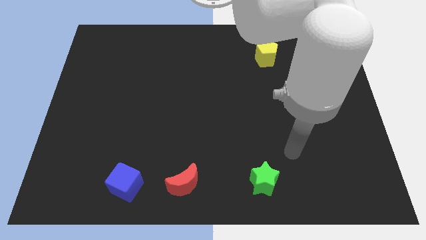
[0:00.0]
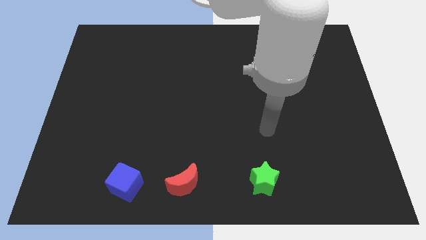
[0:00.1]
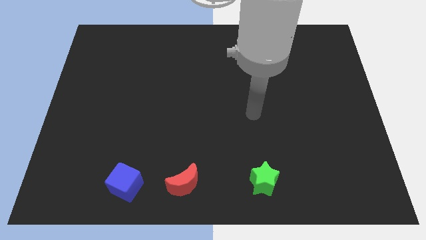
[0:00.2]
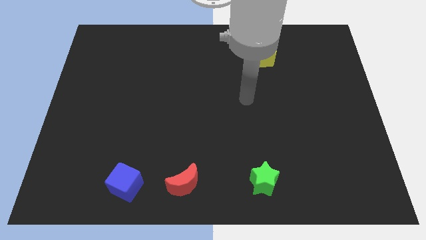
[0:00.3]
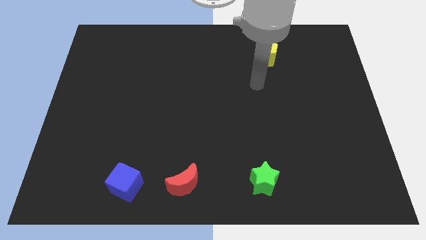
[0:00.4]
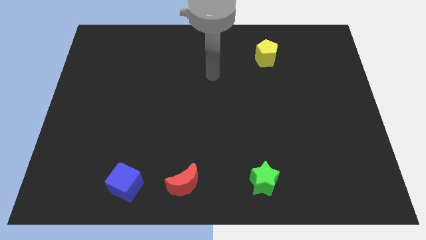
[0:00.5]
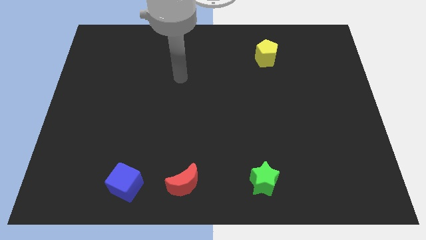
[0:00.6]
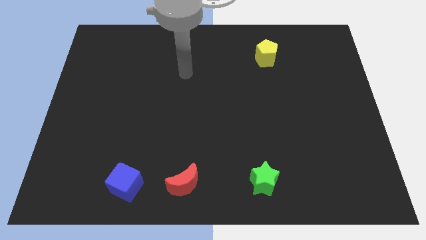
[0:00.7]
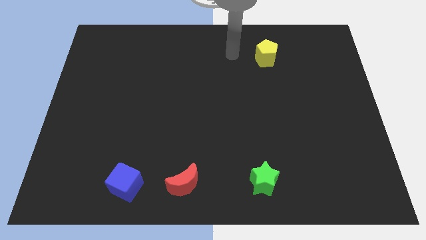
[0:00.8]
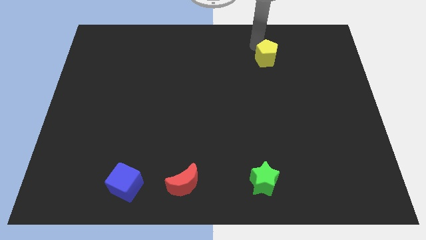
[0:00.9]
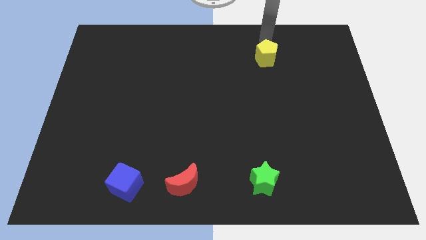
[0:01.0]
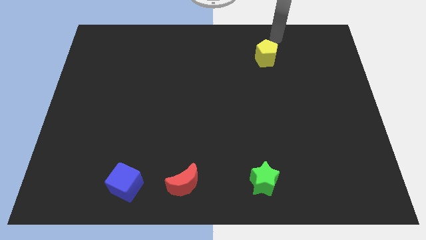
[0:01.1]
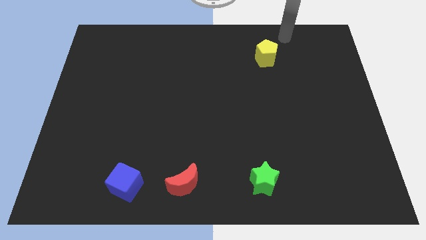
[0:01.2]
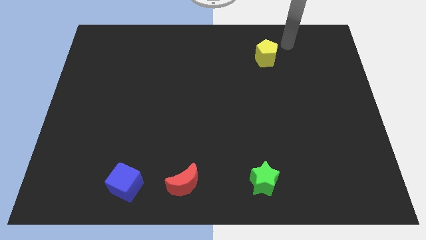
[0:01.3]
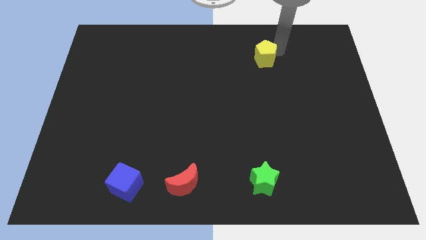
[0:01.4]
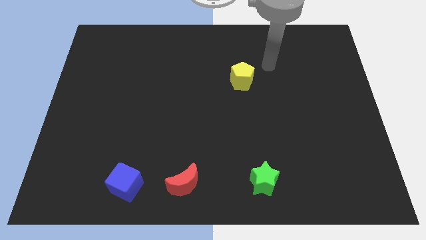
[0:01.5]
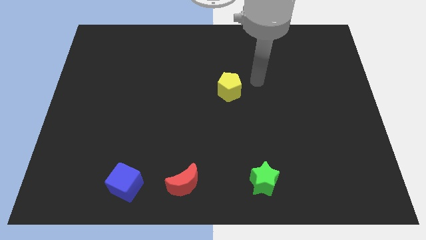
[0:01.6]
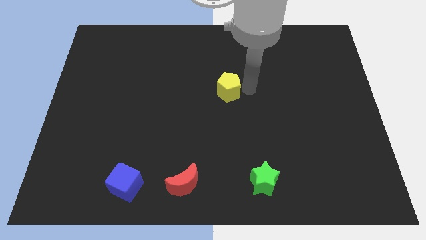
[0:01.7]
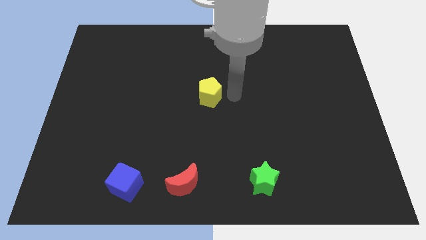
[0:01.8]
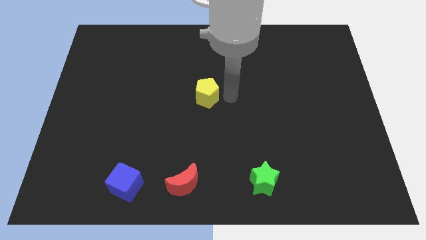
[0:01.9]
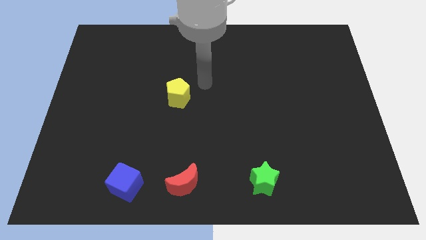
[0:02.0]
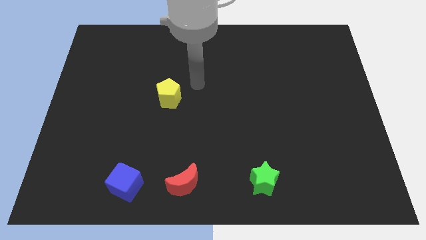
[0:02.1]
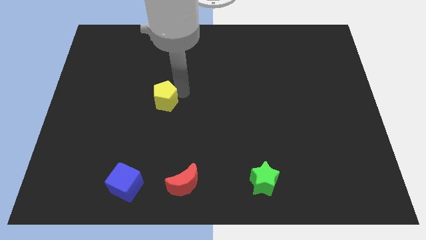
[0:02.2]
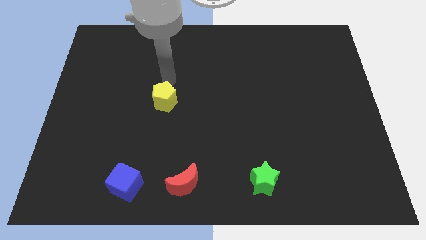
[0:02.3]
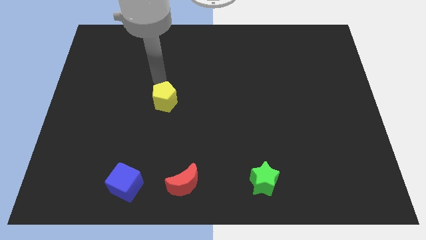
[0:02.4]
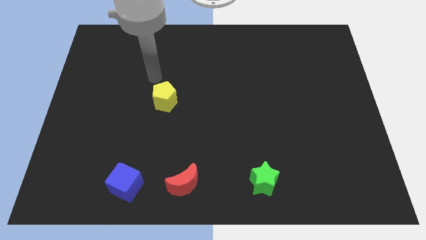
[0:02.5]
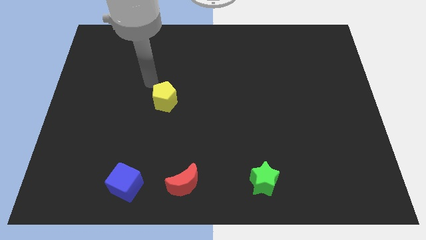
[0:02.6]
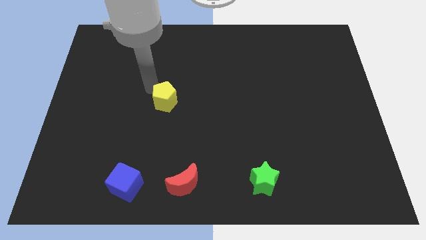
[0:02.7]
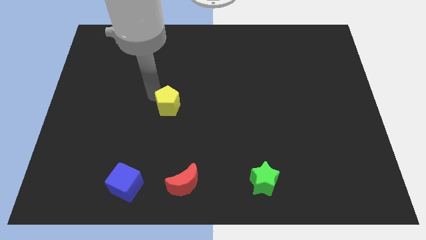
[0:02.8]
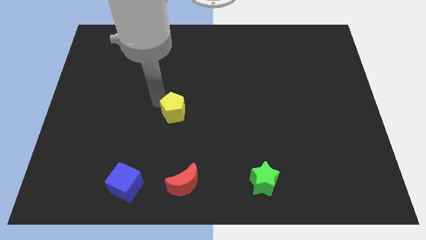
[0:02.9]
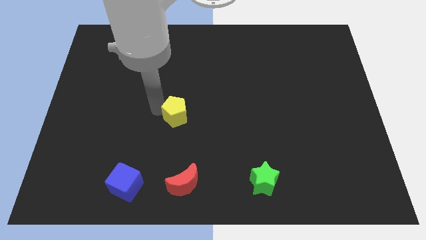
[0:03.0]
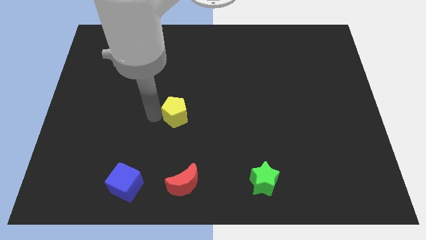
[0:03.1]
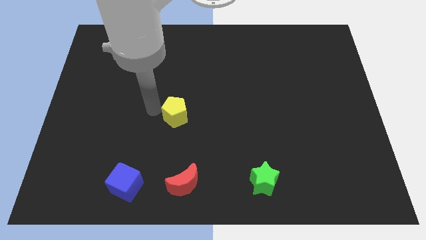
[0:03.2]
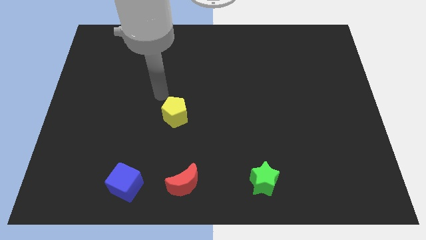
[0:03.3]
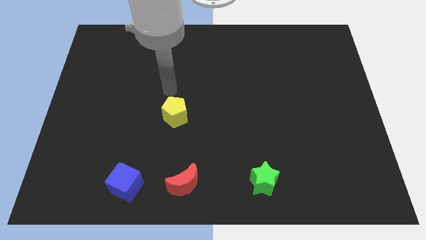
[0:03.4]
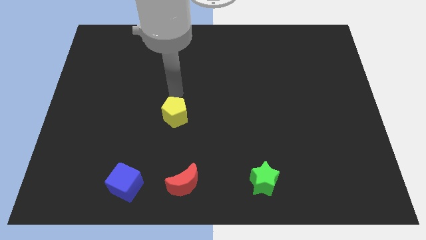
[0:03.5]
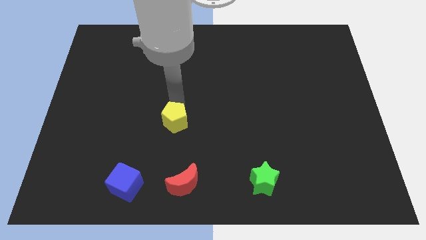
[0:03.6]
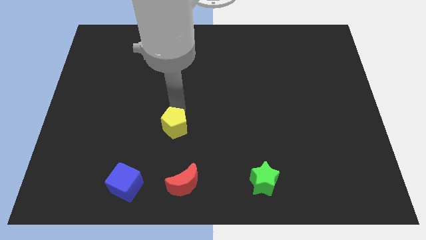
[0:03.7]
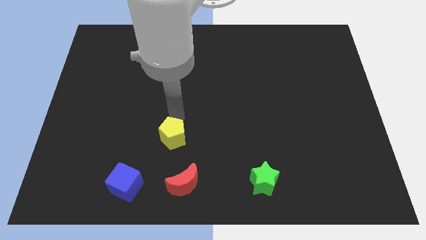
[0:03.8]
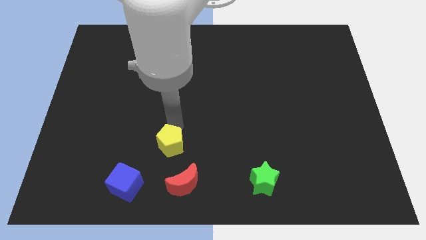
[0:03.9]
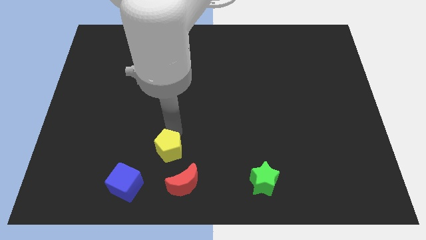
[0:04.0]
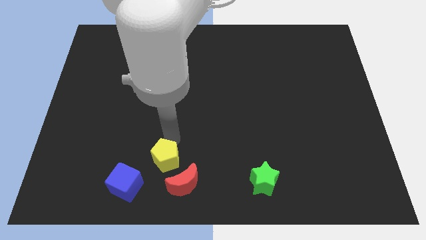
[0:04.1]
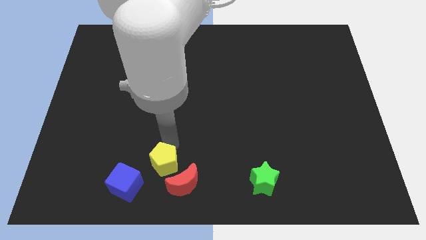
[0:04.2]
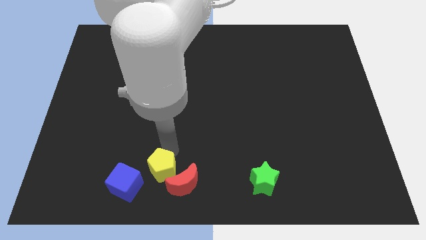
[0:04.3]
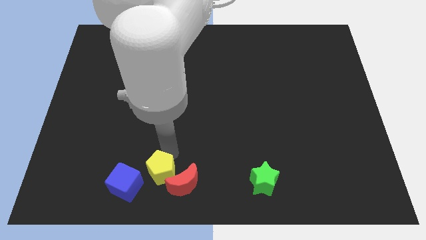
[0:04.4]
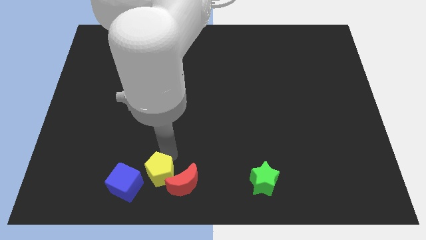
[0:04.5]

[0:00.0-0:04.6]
move the pentagon towards the red block

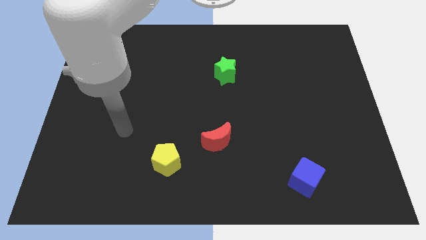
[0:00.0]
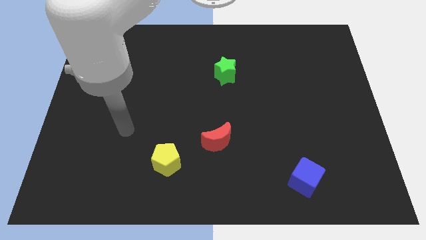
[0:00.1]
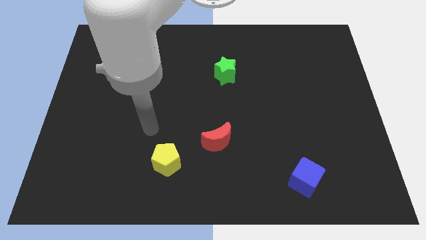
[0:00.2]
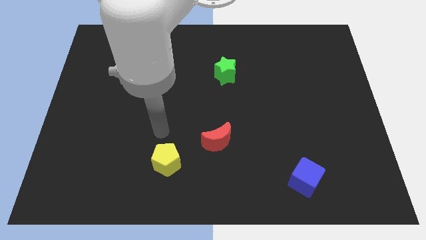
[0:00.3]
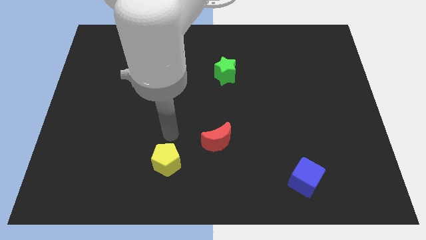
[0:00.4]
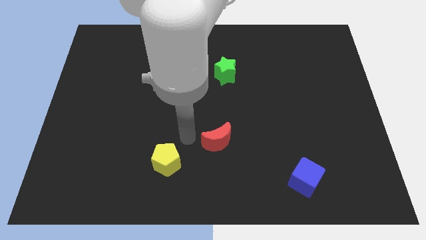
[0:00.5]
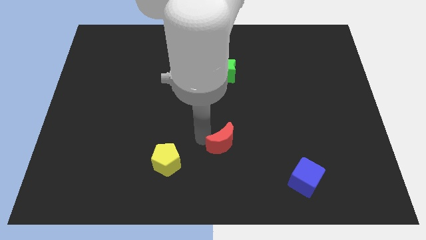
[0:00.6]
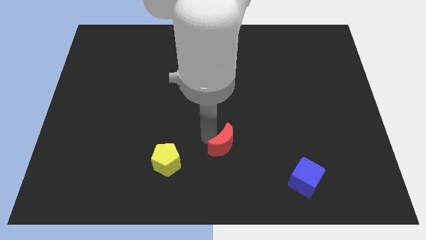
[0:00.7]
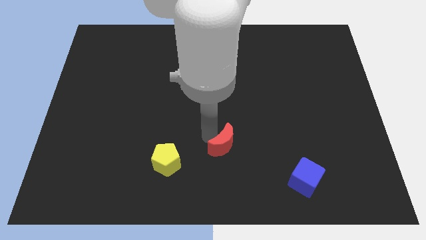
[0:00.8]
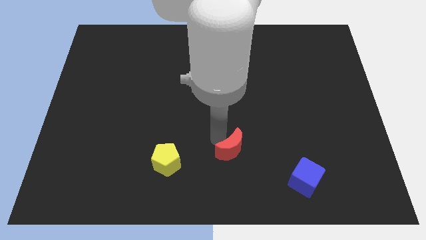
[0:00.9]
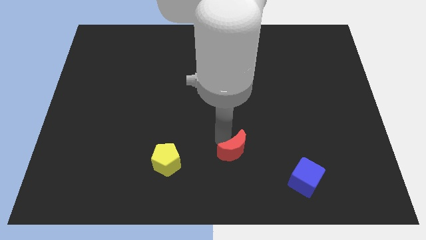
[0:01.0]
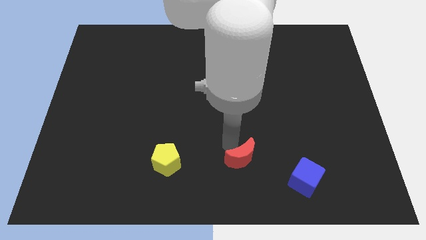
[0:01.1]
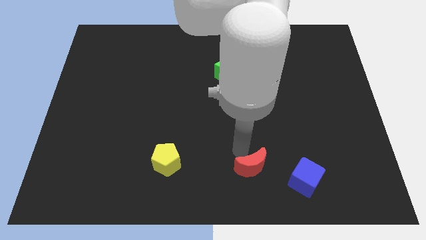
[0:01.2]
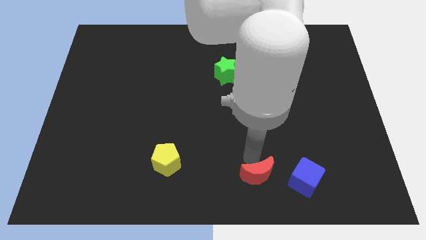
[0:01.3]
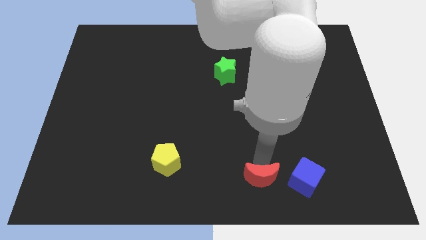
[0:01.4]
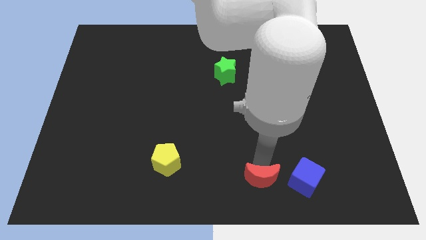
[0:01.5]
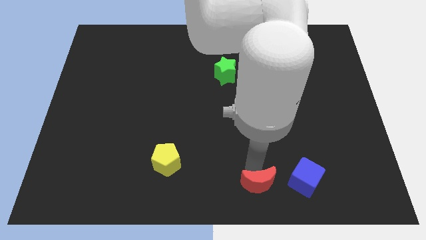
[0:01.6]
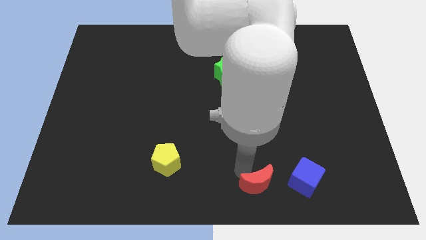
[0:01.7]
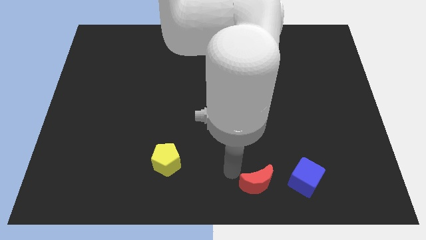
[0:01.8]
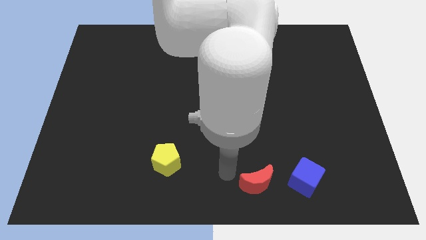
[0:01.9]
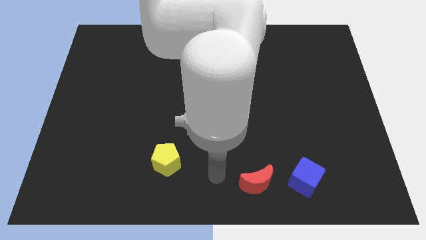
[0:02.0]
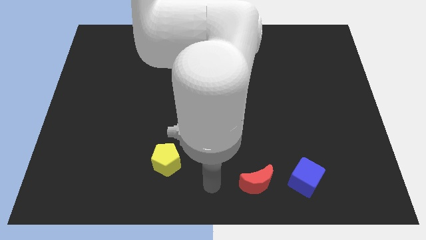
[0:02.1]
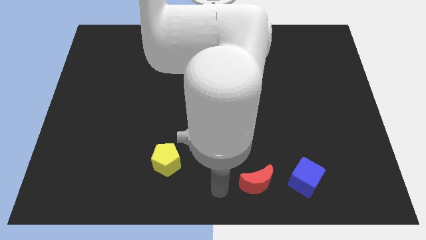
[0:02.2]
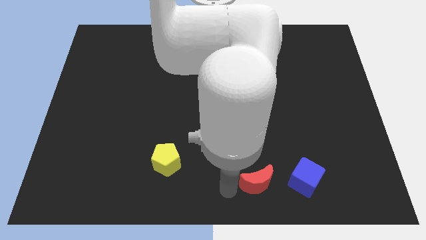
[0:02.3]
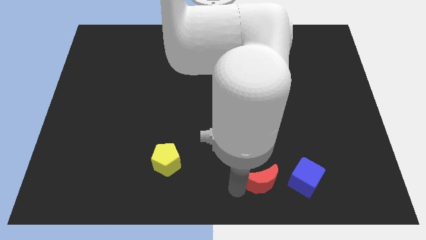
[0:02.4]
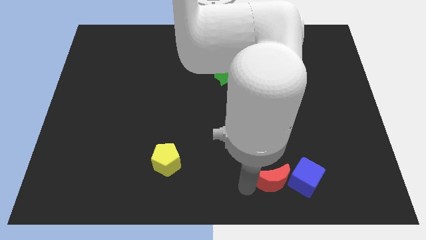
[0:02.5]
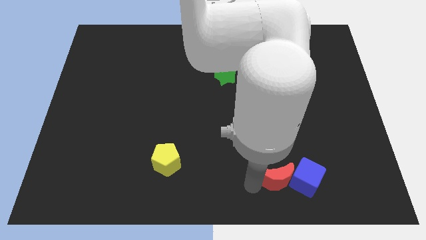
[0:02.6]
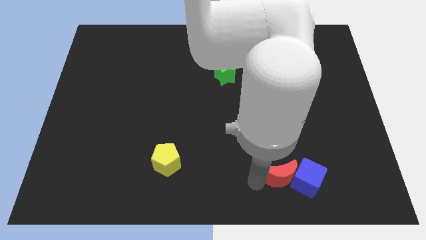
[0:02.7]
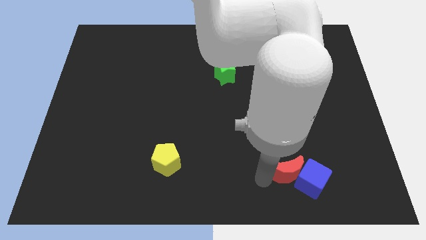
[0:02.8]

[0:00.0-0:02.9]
push the red block next to the blue cube

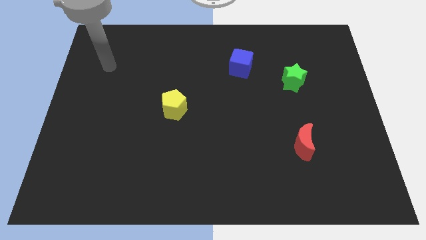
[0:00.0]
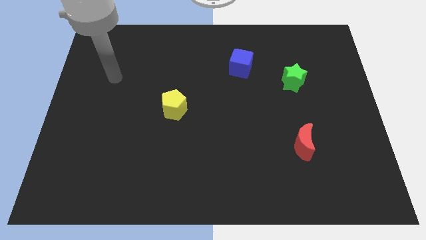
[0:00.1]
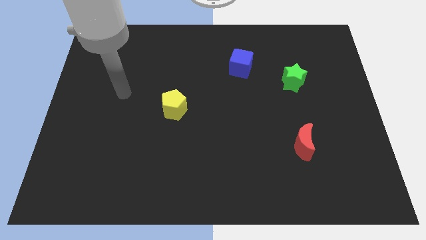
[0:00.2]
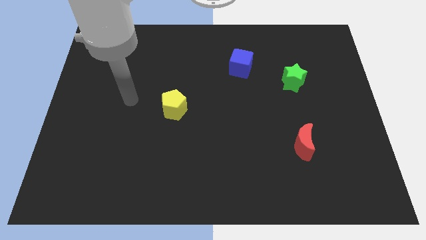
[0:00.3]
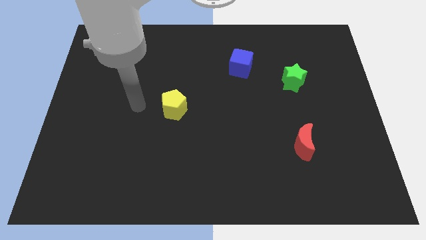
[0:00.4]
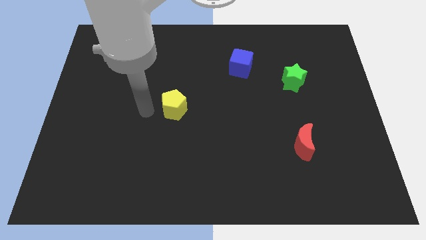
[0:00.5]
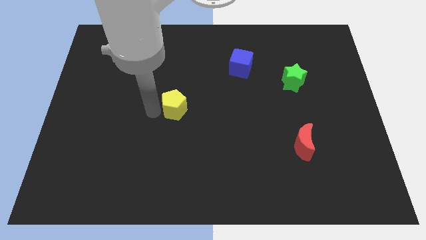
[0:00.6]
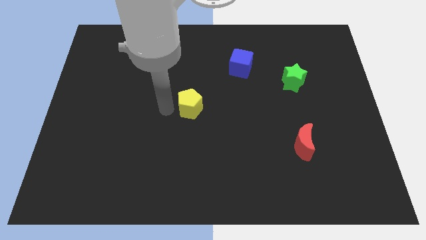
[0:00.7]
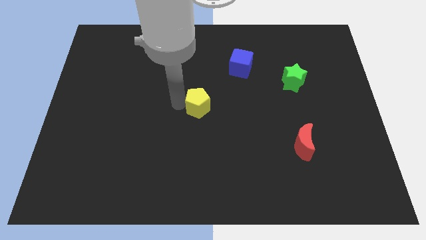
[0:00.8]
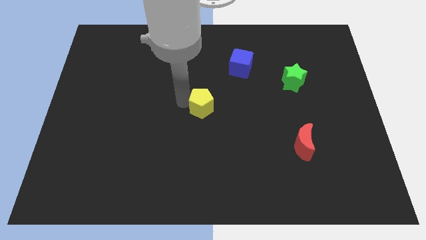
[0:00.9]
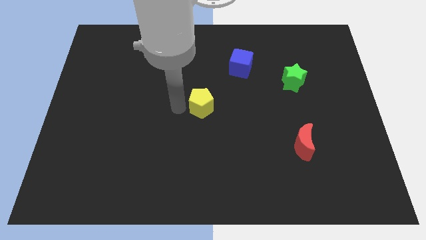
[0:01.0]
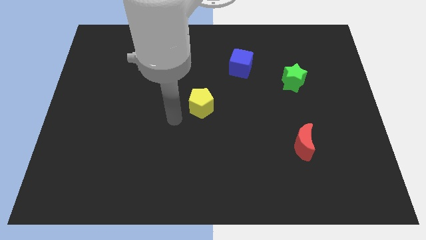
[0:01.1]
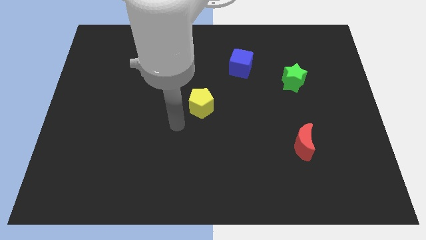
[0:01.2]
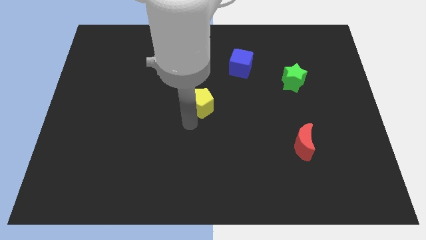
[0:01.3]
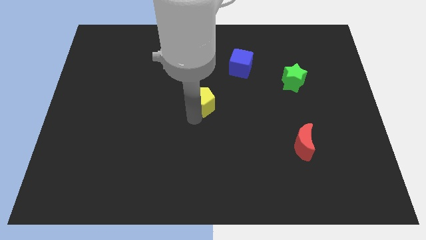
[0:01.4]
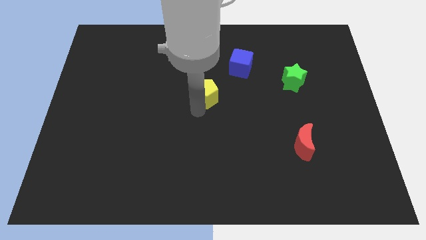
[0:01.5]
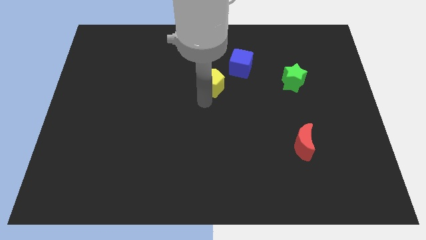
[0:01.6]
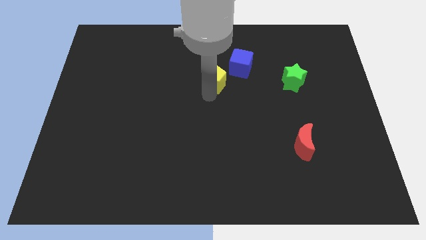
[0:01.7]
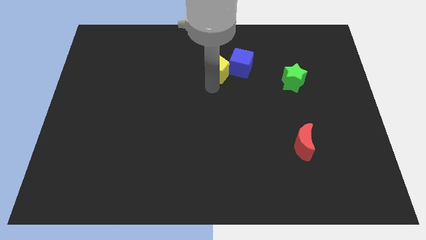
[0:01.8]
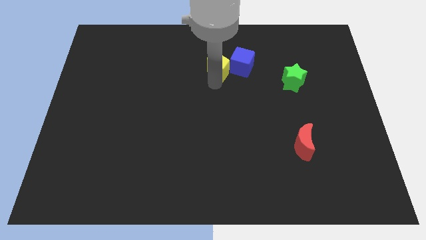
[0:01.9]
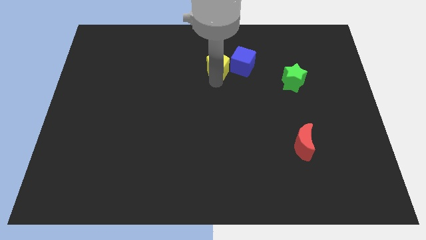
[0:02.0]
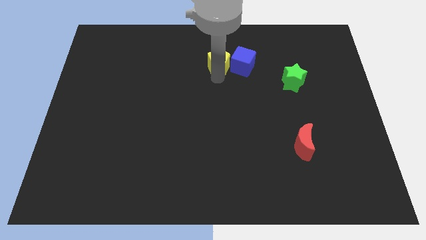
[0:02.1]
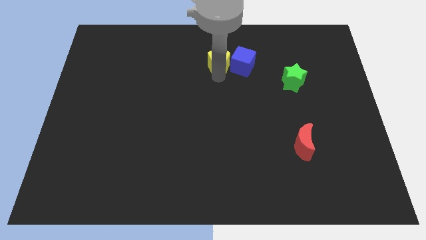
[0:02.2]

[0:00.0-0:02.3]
put the yellow pentagon towards the cube
